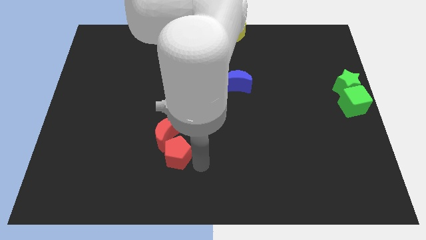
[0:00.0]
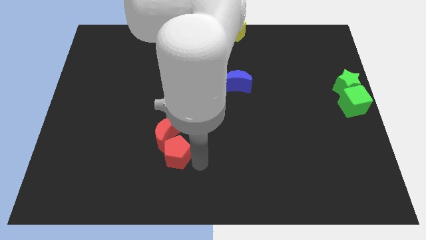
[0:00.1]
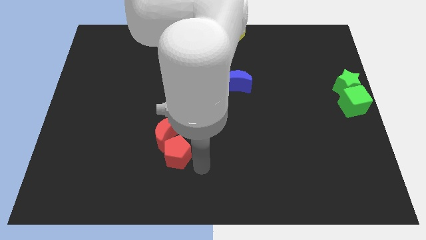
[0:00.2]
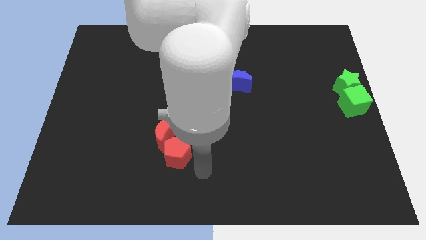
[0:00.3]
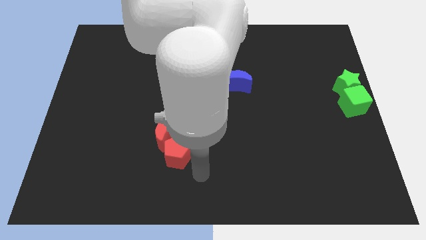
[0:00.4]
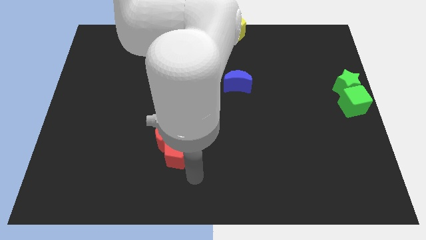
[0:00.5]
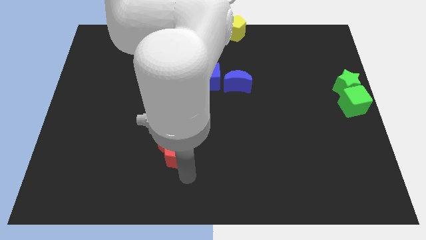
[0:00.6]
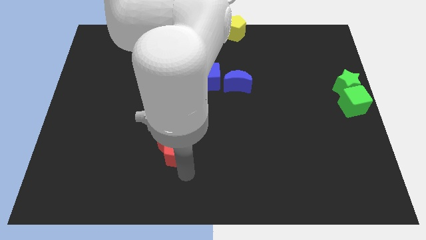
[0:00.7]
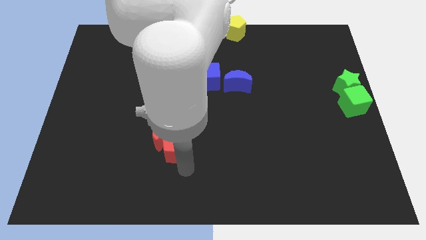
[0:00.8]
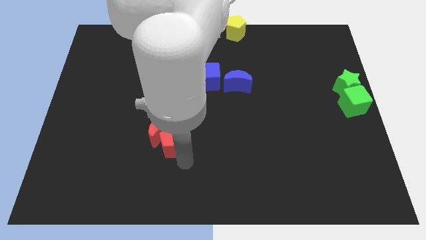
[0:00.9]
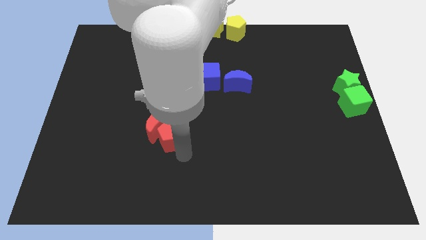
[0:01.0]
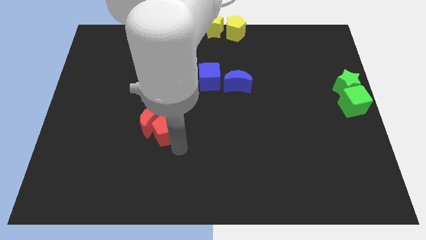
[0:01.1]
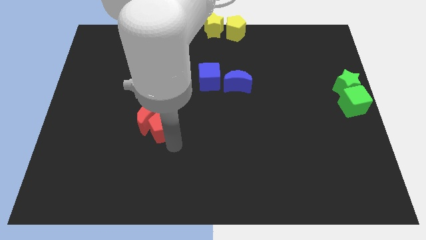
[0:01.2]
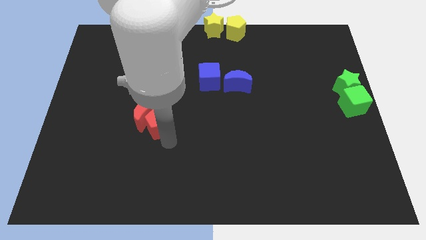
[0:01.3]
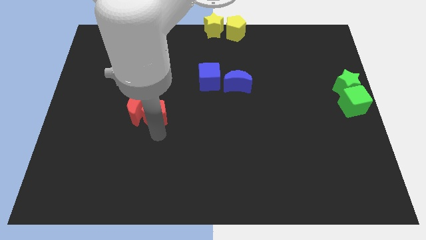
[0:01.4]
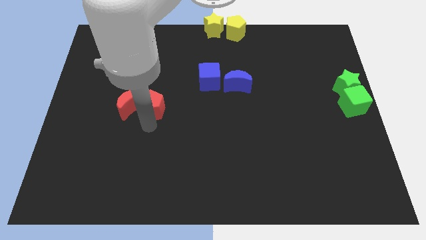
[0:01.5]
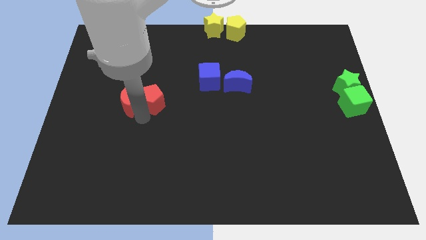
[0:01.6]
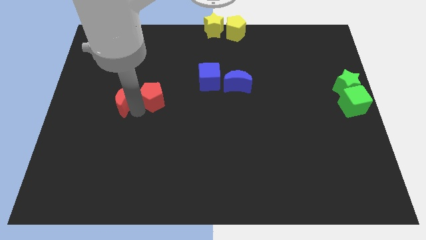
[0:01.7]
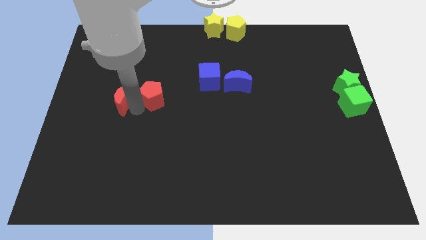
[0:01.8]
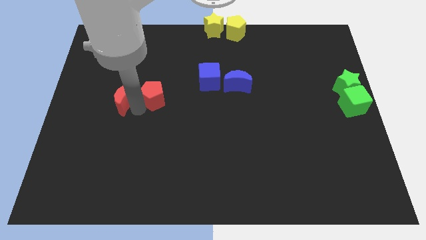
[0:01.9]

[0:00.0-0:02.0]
push the red pentagon into the red crescent

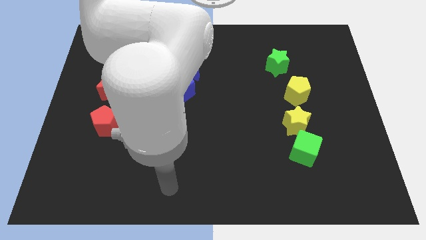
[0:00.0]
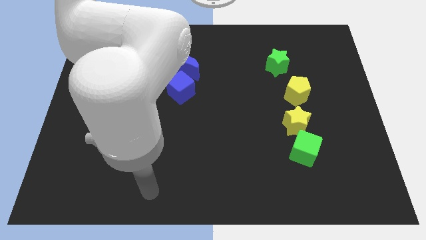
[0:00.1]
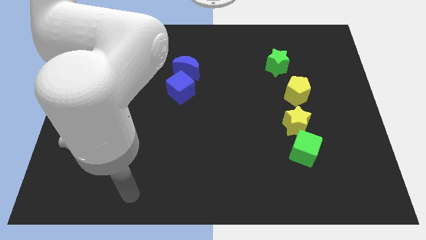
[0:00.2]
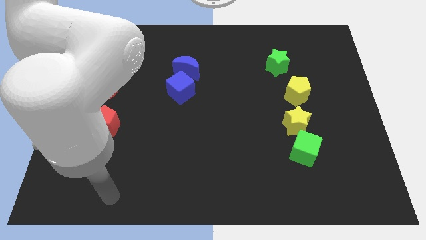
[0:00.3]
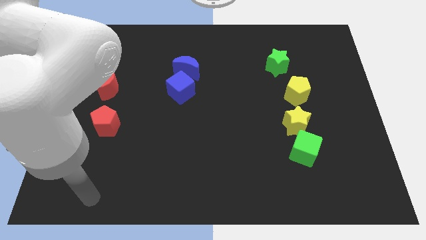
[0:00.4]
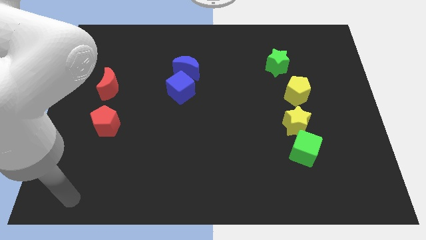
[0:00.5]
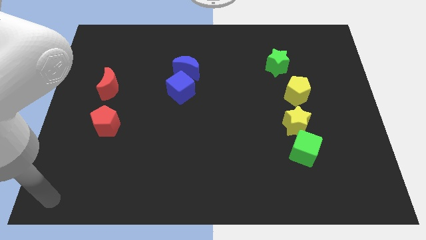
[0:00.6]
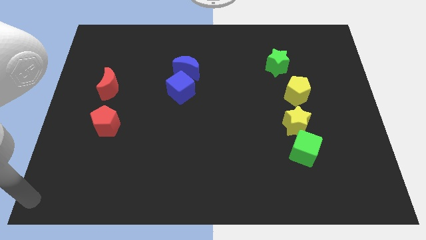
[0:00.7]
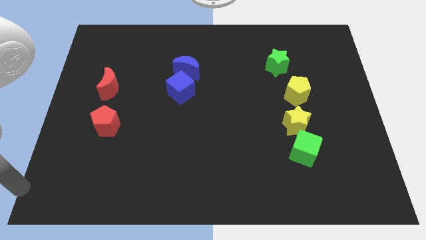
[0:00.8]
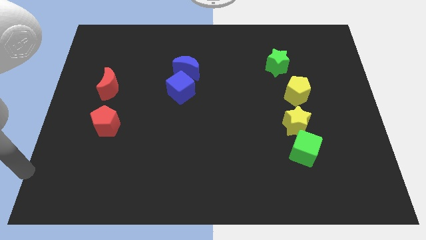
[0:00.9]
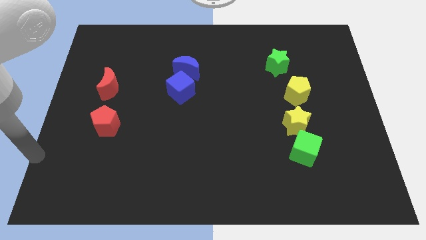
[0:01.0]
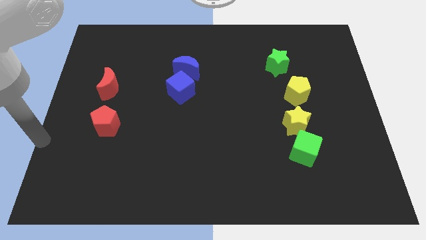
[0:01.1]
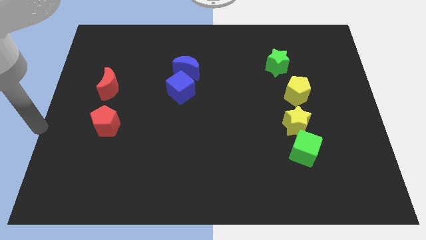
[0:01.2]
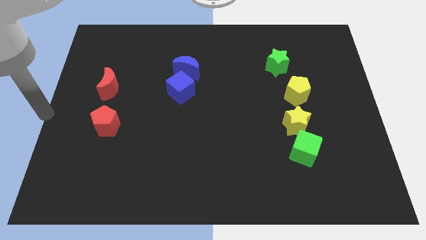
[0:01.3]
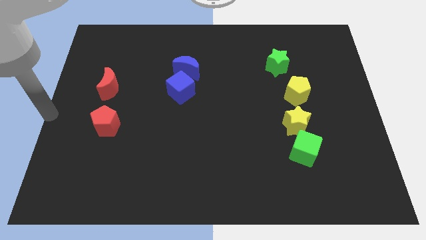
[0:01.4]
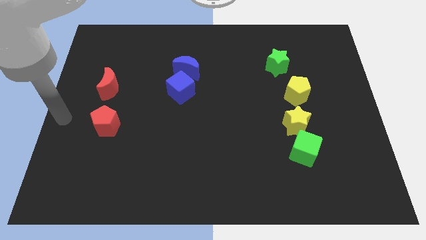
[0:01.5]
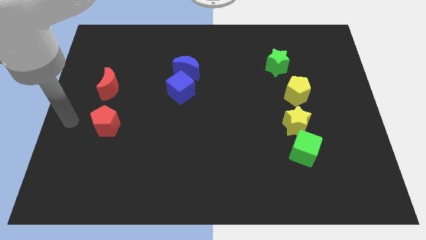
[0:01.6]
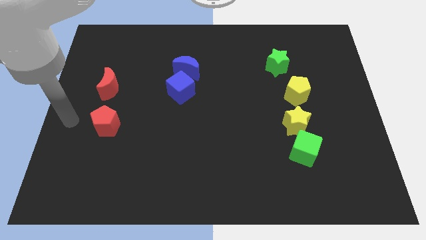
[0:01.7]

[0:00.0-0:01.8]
point your hand at the left side of the red pentagon

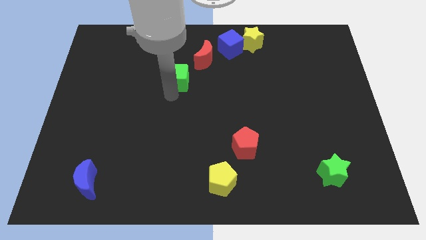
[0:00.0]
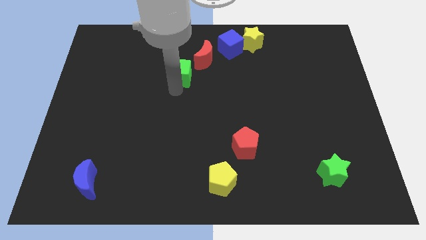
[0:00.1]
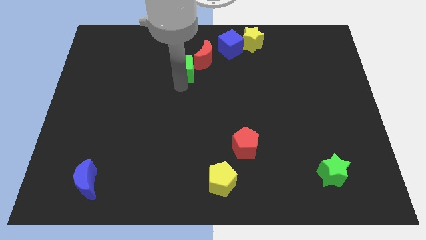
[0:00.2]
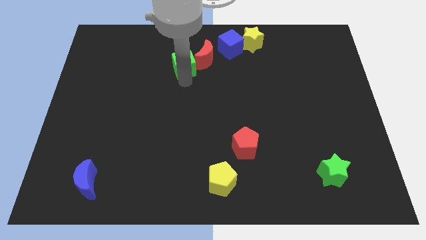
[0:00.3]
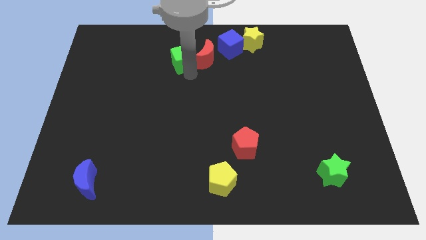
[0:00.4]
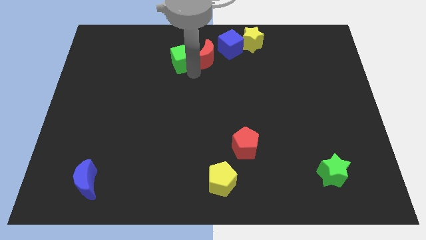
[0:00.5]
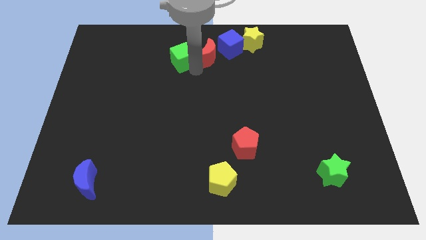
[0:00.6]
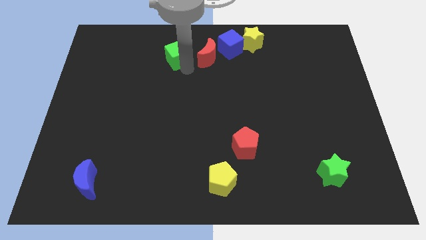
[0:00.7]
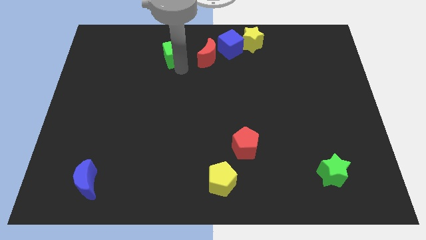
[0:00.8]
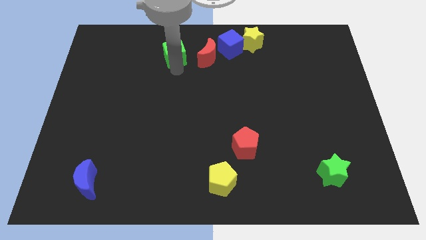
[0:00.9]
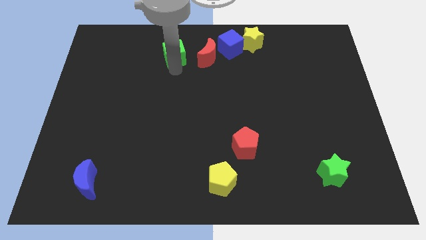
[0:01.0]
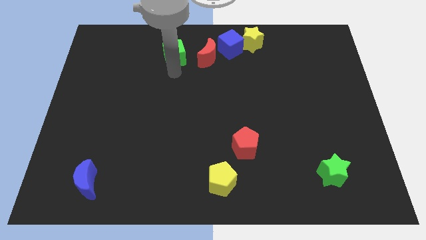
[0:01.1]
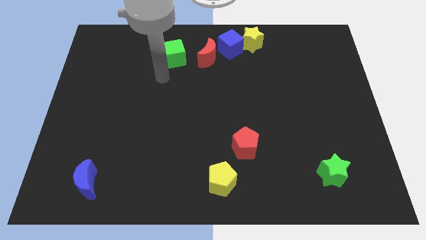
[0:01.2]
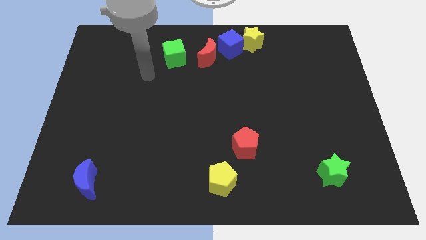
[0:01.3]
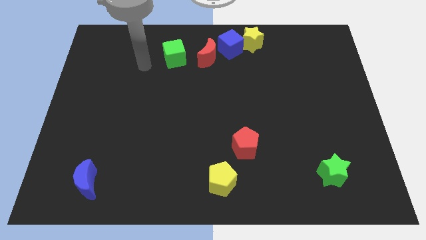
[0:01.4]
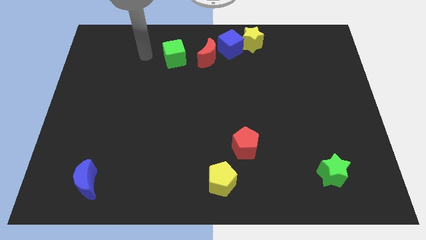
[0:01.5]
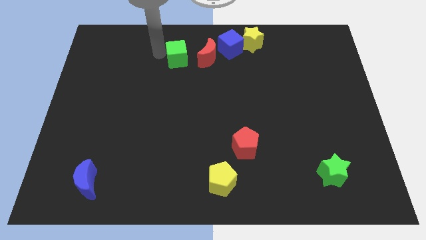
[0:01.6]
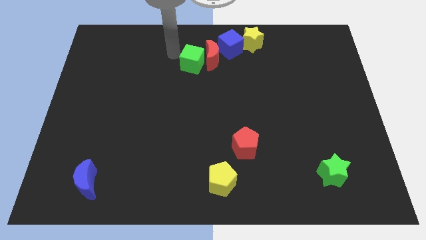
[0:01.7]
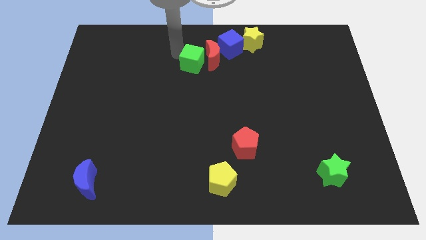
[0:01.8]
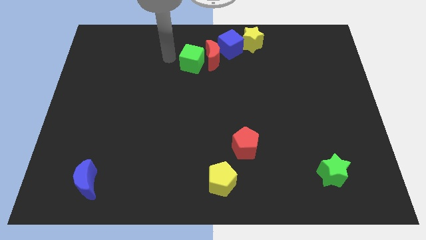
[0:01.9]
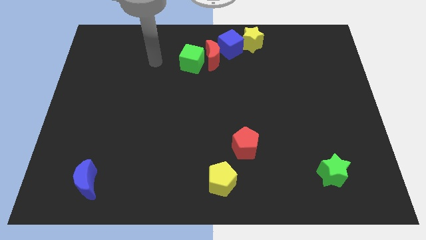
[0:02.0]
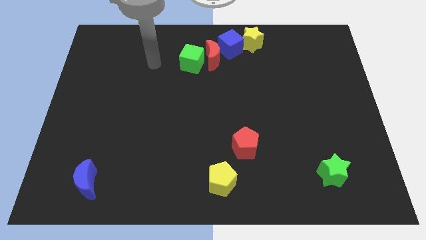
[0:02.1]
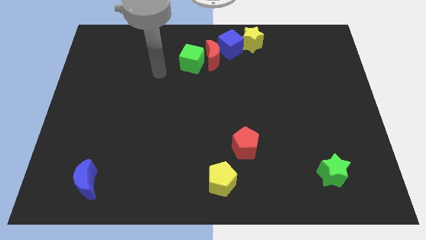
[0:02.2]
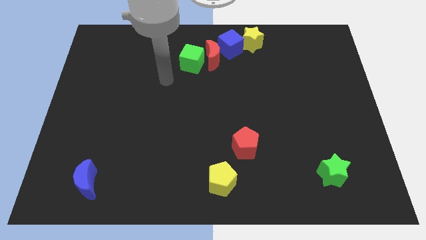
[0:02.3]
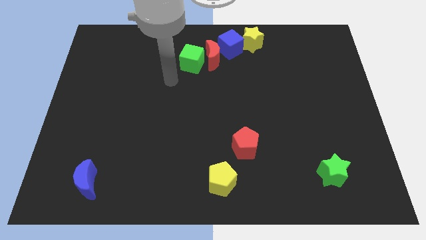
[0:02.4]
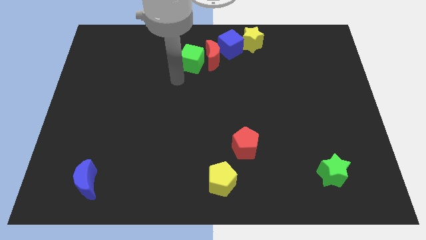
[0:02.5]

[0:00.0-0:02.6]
place the green cube into the red moom to the left

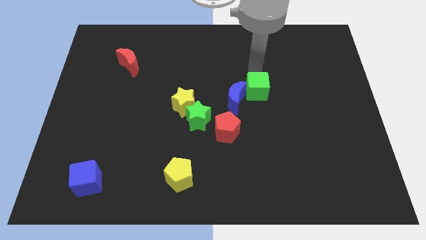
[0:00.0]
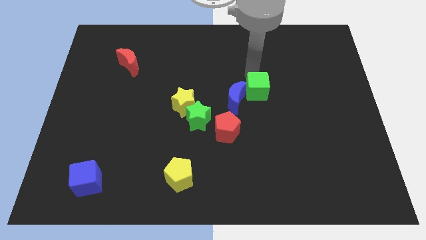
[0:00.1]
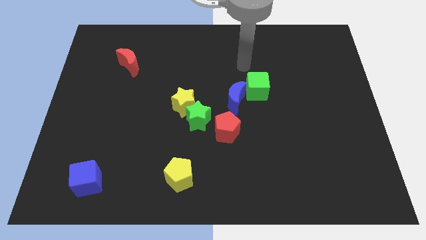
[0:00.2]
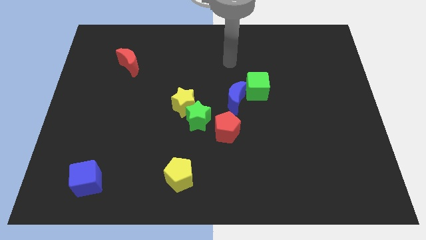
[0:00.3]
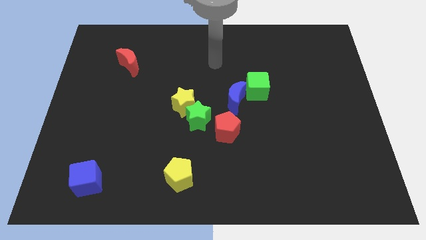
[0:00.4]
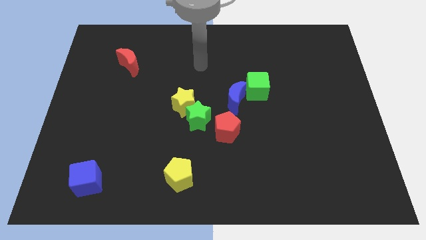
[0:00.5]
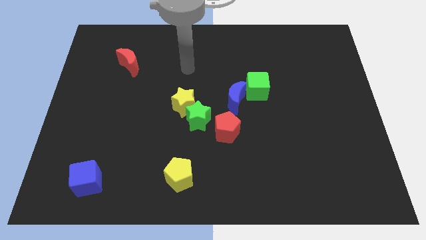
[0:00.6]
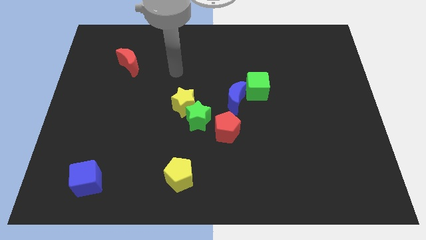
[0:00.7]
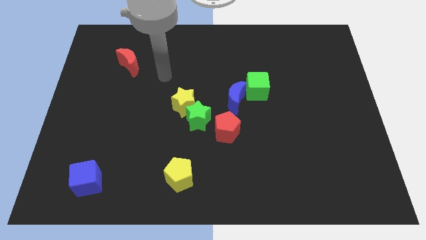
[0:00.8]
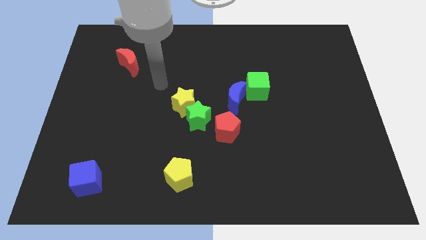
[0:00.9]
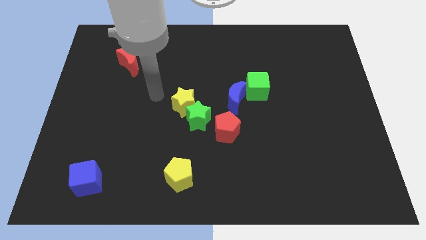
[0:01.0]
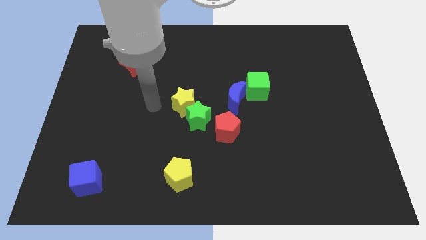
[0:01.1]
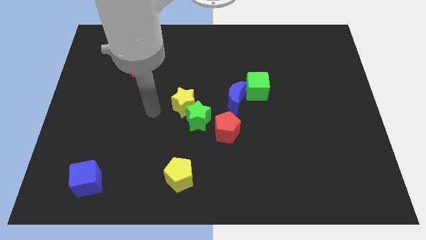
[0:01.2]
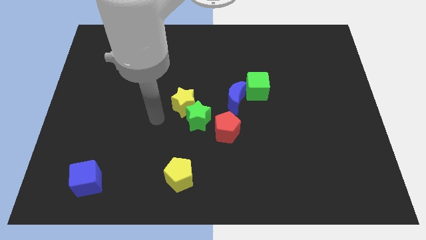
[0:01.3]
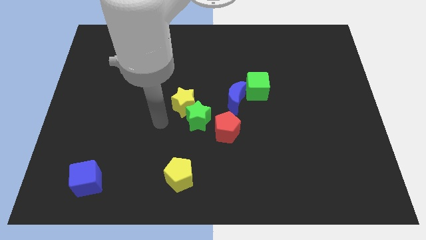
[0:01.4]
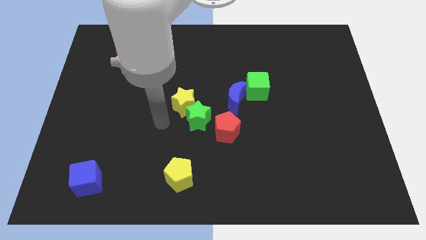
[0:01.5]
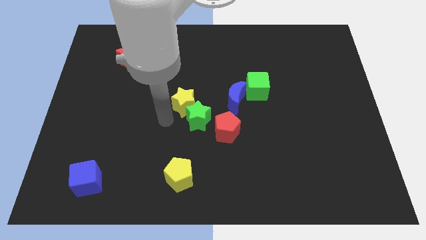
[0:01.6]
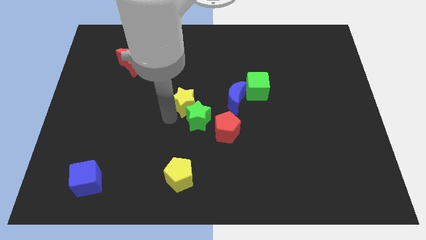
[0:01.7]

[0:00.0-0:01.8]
tap at the left side of the yellow star

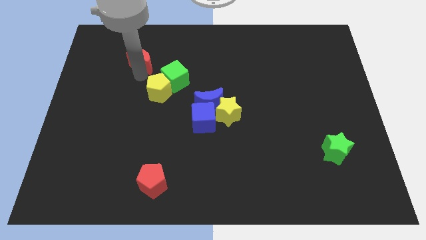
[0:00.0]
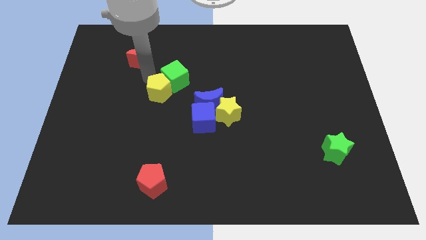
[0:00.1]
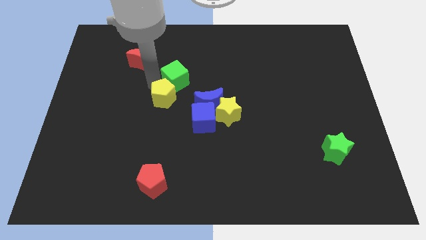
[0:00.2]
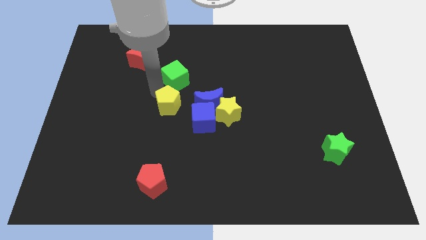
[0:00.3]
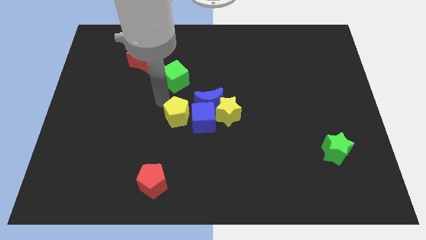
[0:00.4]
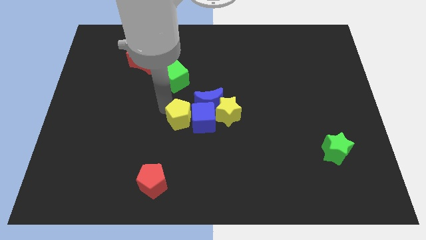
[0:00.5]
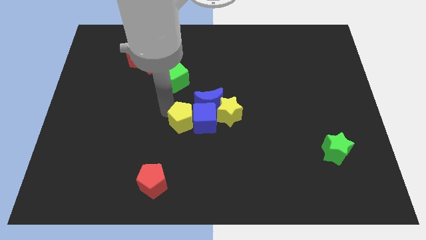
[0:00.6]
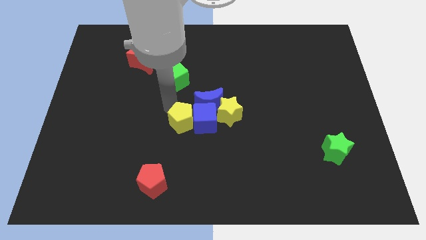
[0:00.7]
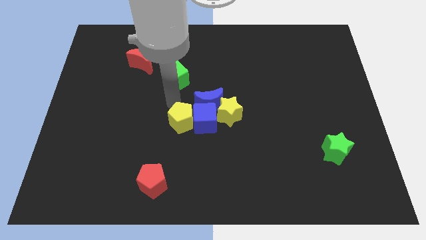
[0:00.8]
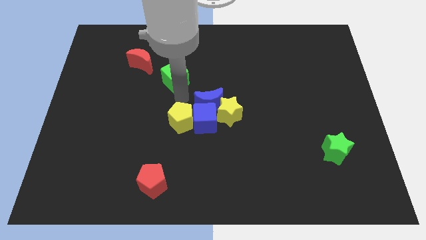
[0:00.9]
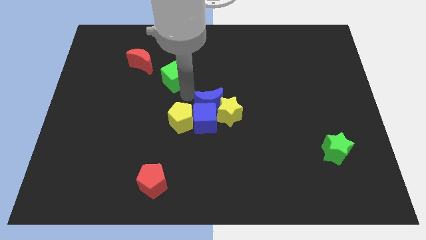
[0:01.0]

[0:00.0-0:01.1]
push the yellow pentagon into the blue cube
